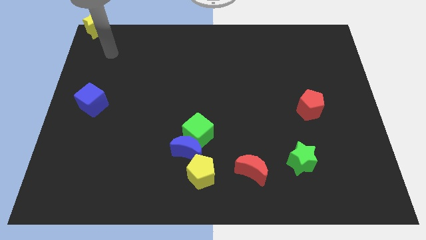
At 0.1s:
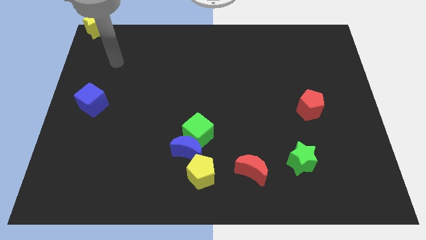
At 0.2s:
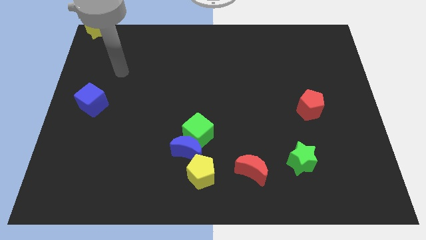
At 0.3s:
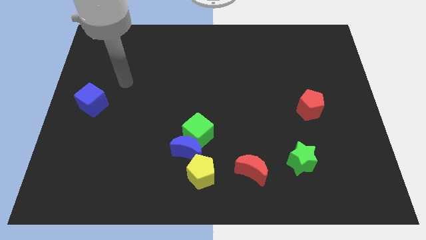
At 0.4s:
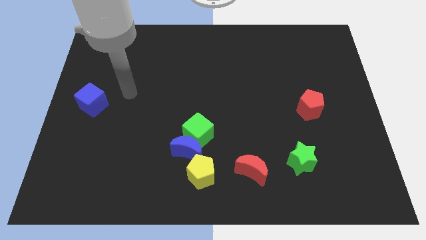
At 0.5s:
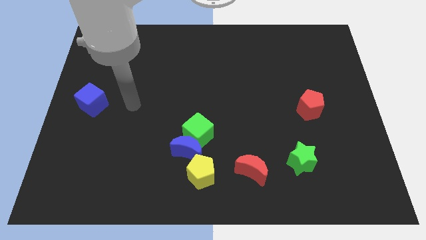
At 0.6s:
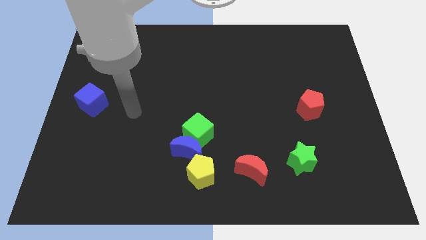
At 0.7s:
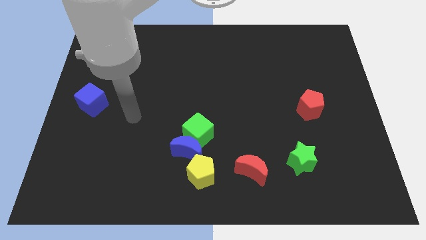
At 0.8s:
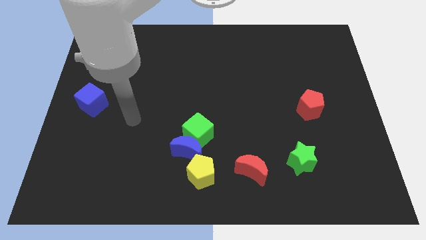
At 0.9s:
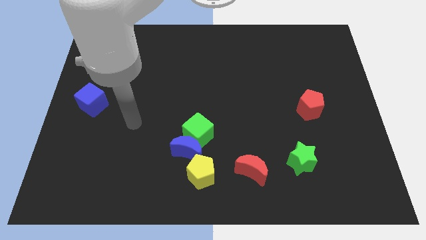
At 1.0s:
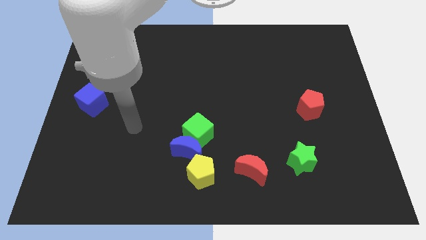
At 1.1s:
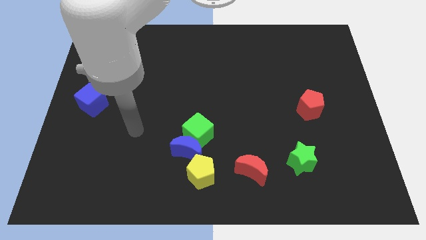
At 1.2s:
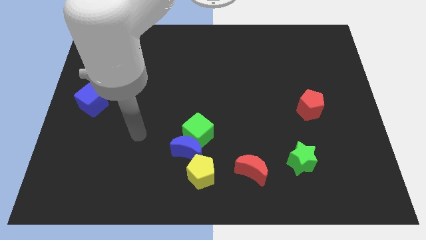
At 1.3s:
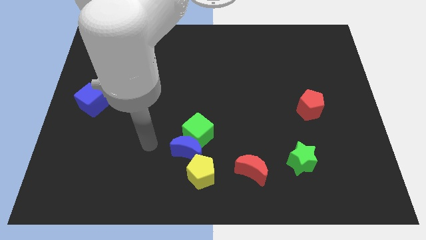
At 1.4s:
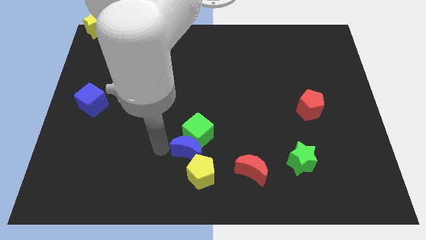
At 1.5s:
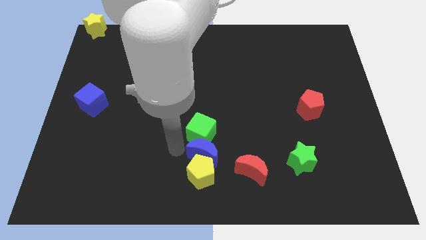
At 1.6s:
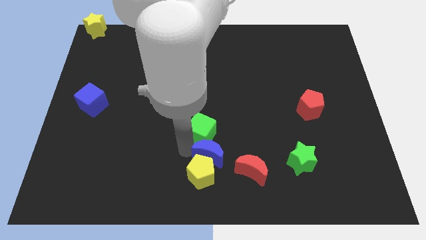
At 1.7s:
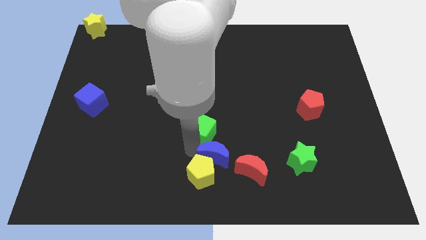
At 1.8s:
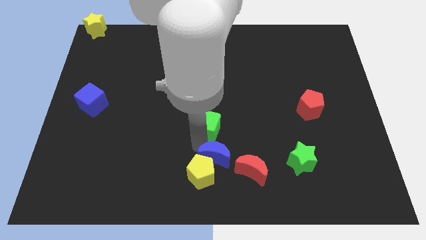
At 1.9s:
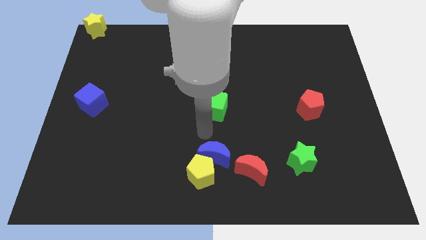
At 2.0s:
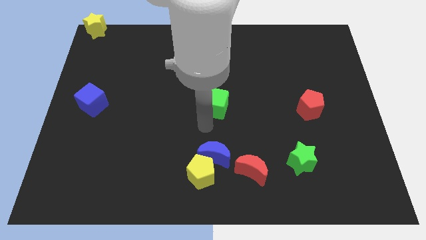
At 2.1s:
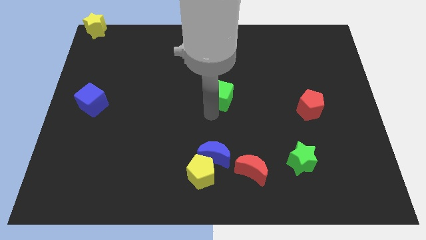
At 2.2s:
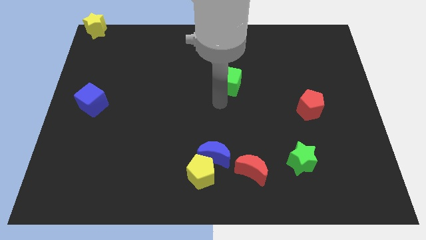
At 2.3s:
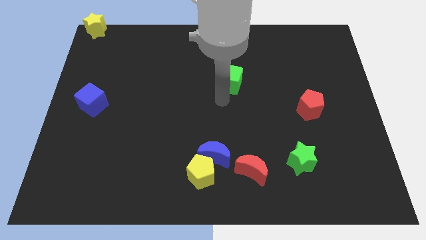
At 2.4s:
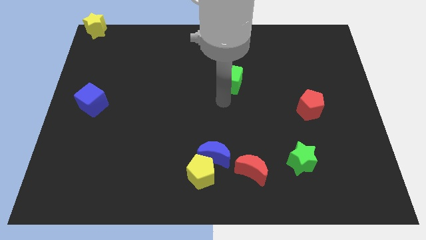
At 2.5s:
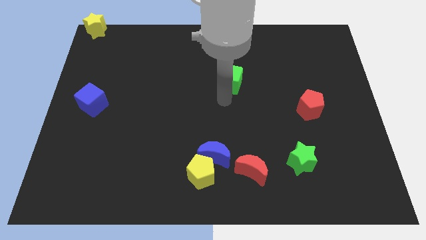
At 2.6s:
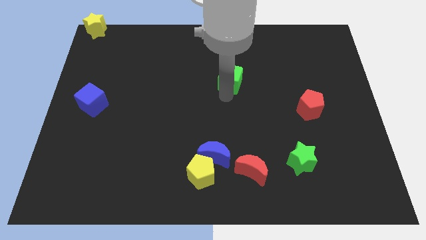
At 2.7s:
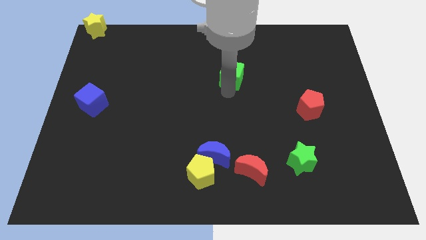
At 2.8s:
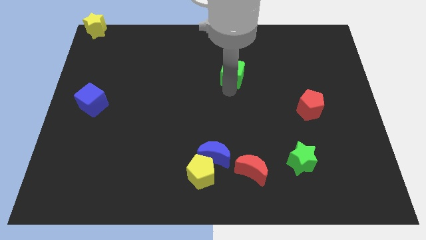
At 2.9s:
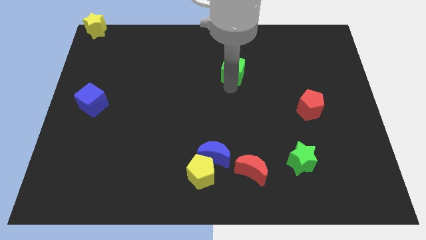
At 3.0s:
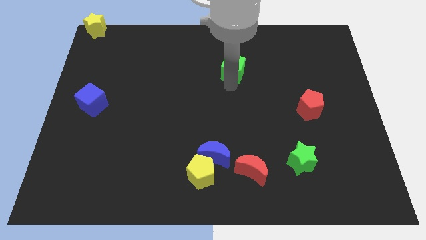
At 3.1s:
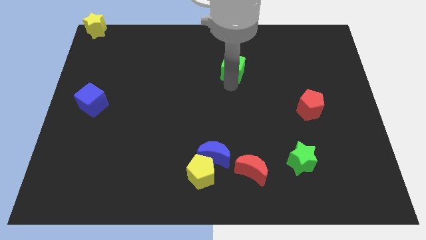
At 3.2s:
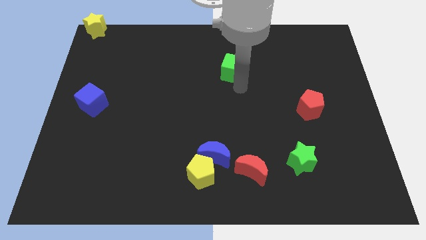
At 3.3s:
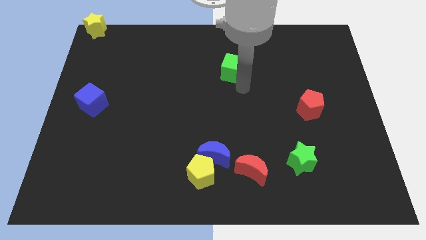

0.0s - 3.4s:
separate the green cube from the blue crescent

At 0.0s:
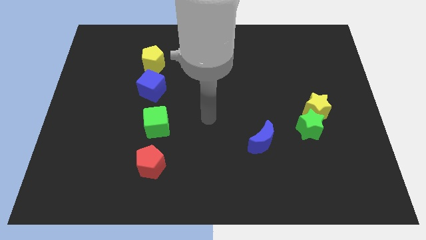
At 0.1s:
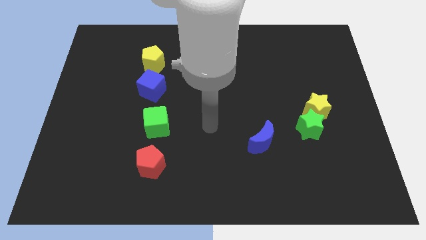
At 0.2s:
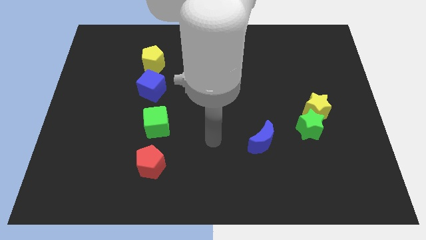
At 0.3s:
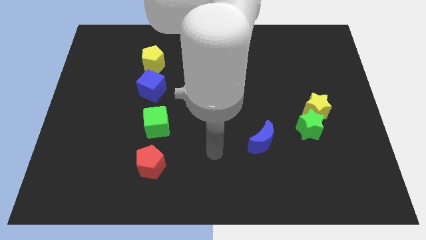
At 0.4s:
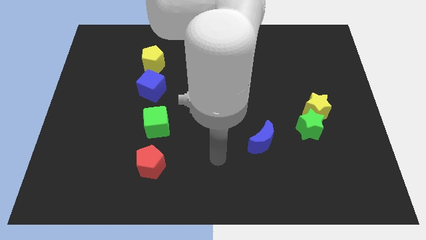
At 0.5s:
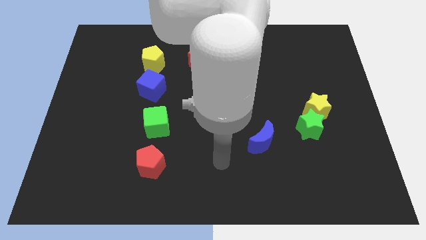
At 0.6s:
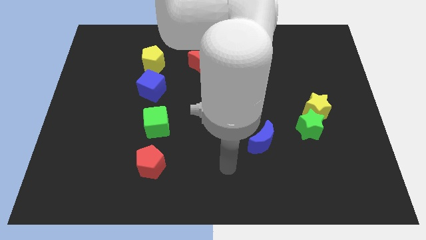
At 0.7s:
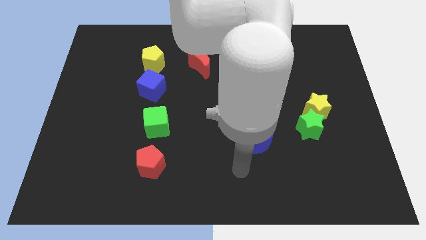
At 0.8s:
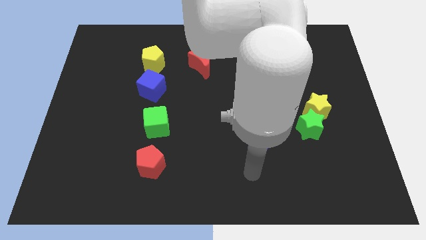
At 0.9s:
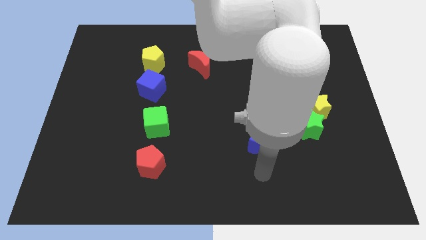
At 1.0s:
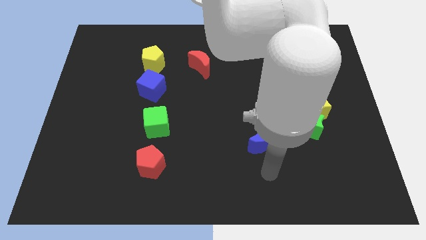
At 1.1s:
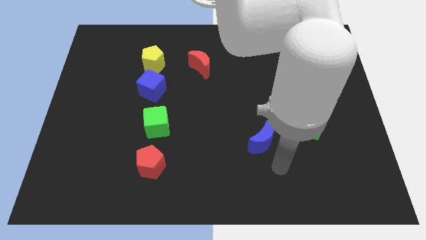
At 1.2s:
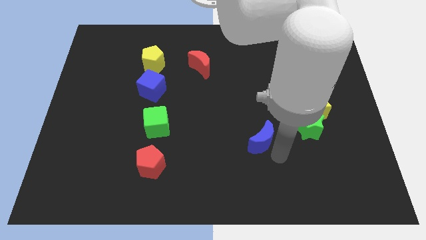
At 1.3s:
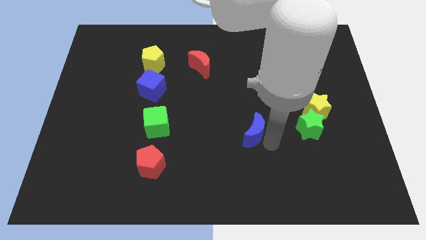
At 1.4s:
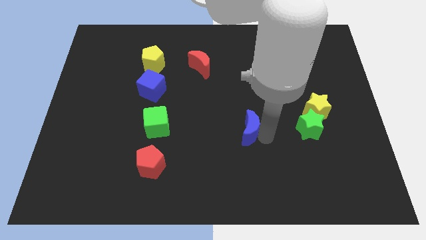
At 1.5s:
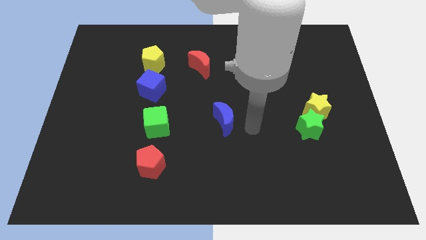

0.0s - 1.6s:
move the blue moon adjacent to the green cube

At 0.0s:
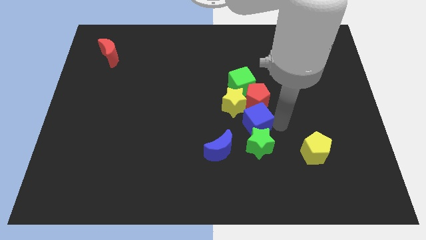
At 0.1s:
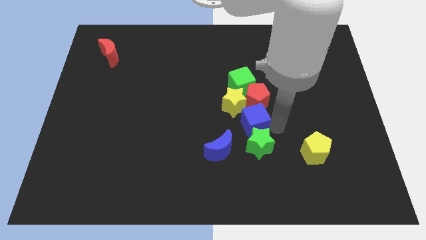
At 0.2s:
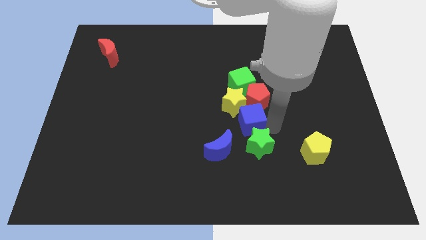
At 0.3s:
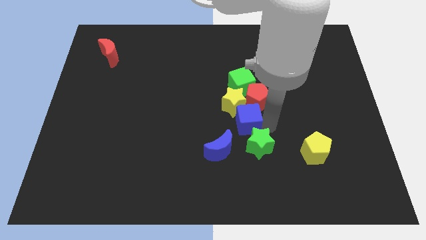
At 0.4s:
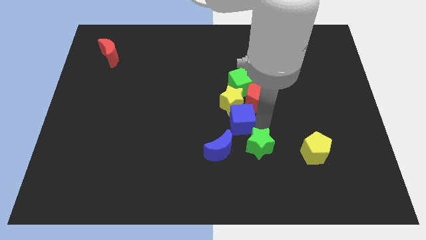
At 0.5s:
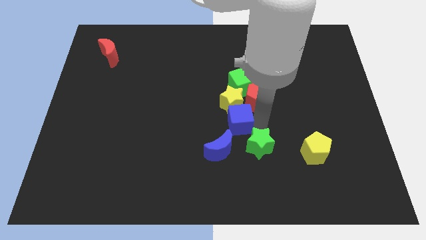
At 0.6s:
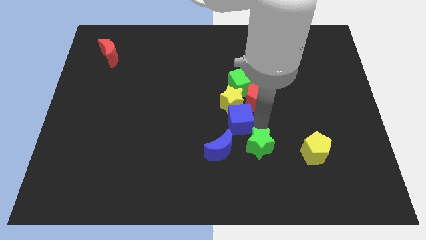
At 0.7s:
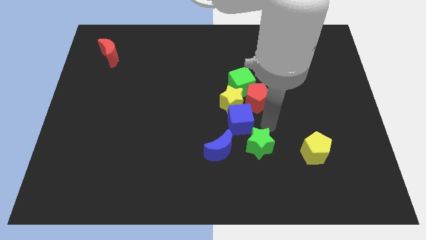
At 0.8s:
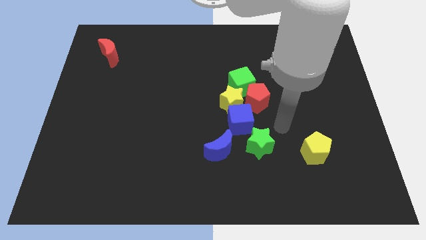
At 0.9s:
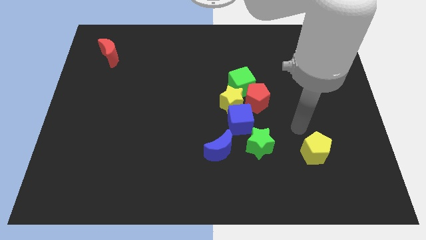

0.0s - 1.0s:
move the blue cube into the group of blocks

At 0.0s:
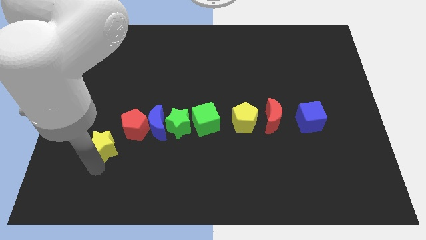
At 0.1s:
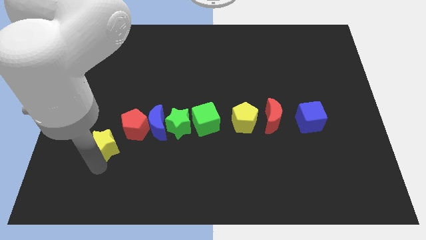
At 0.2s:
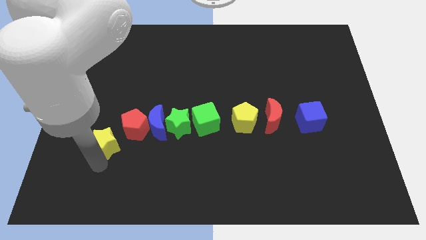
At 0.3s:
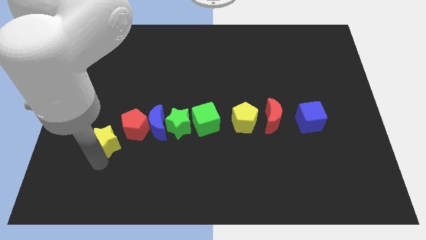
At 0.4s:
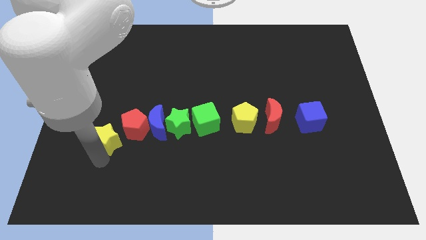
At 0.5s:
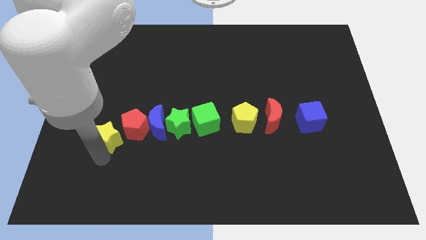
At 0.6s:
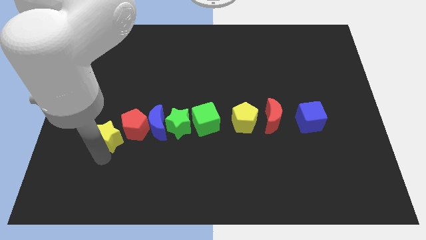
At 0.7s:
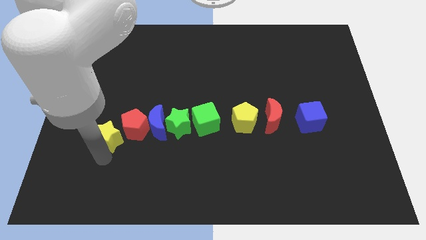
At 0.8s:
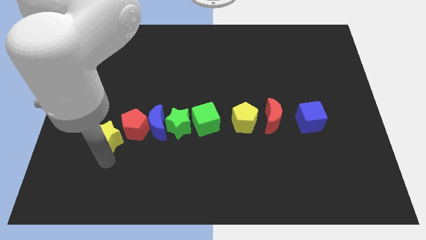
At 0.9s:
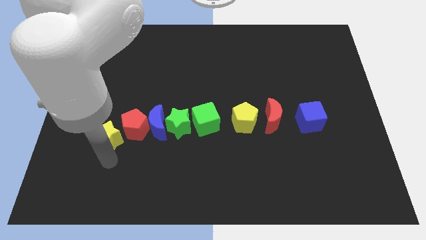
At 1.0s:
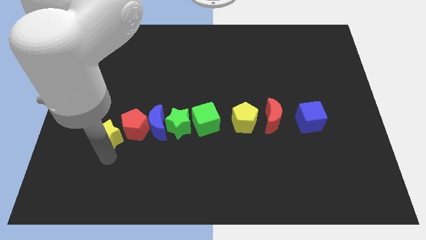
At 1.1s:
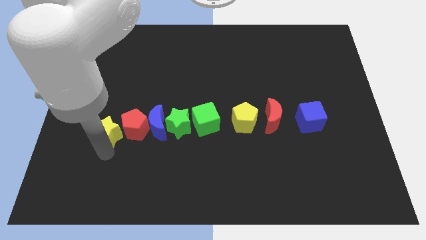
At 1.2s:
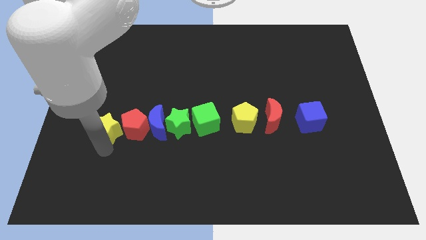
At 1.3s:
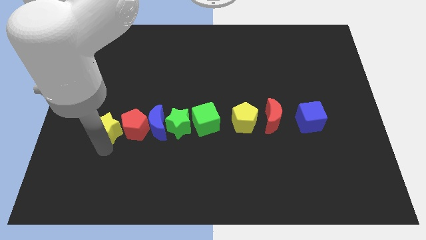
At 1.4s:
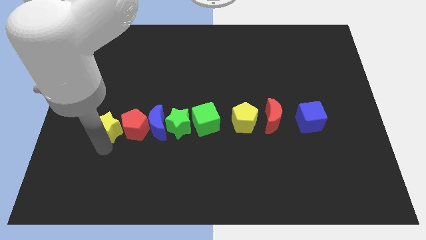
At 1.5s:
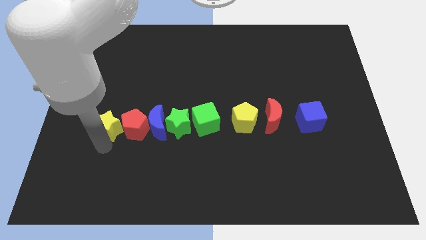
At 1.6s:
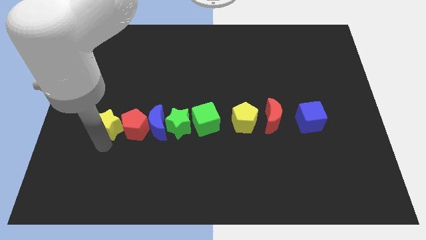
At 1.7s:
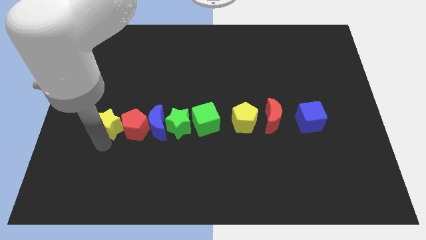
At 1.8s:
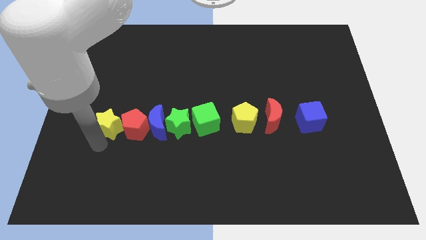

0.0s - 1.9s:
push the yellow star to the left side of the red pentagon

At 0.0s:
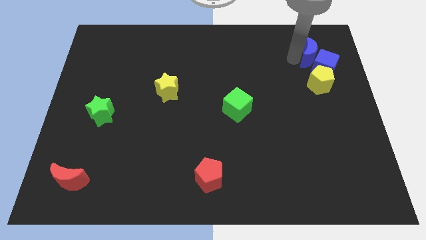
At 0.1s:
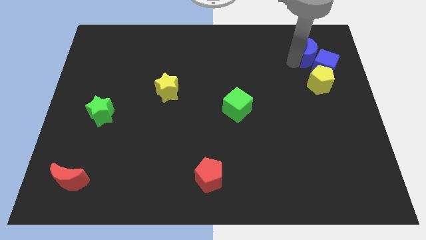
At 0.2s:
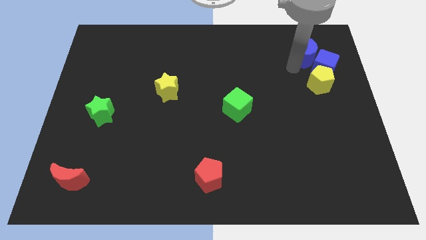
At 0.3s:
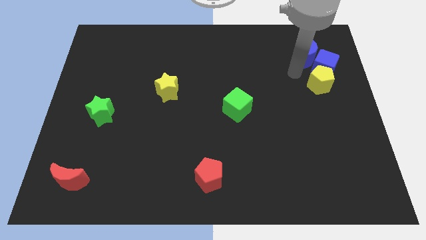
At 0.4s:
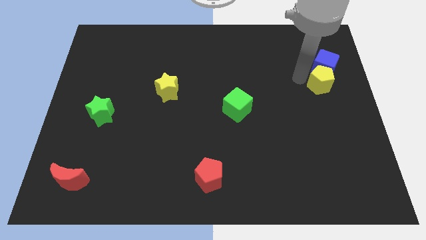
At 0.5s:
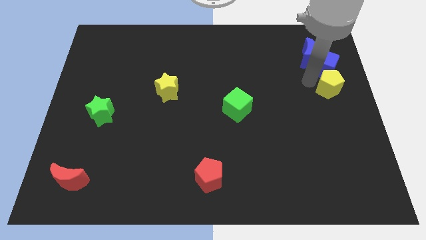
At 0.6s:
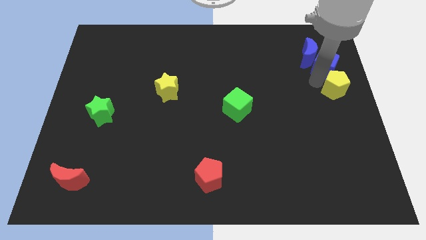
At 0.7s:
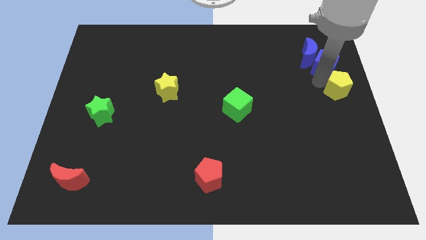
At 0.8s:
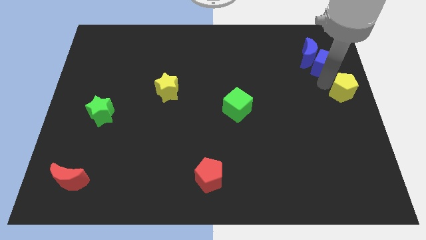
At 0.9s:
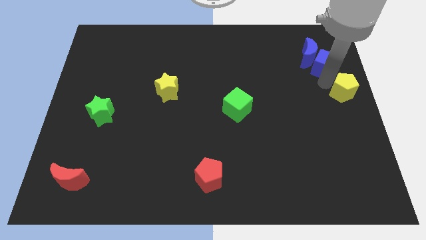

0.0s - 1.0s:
place yellow pentagon to the bottom right of blue cube
